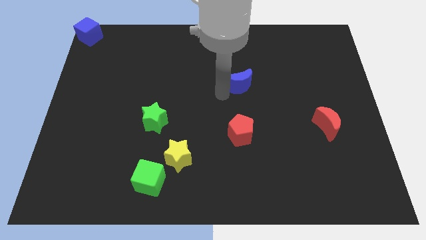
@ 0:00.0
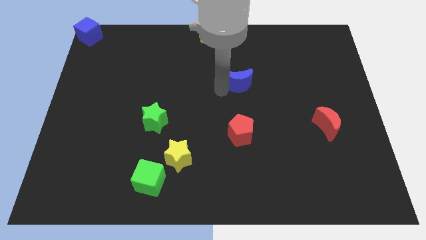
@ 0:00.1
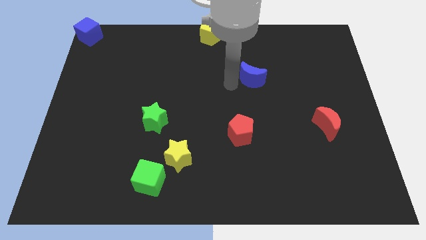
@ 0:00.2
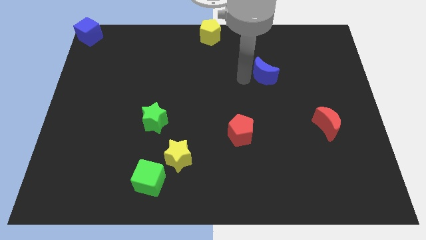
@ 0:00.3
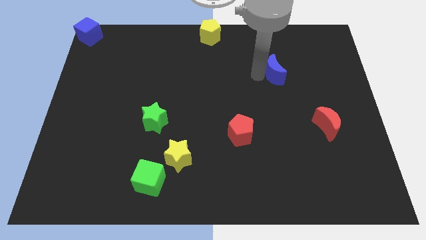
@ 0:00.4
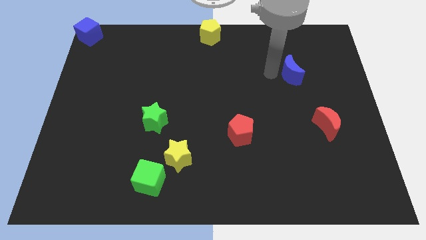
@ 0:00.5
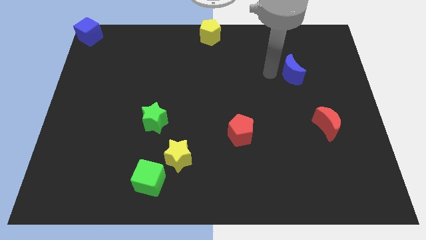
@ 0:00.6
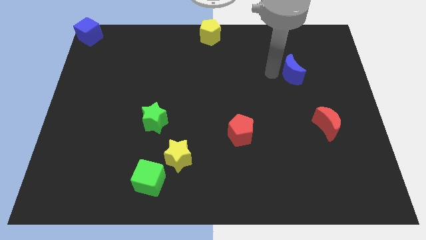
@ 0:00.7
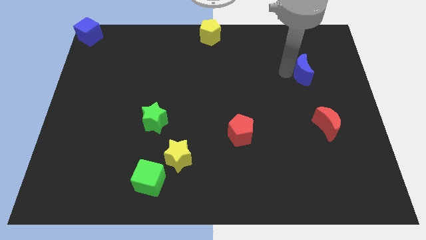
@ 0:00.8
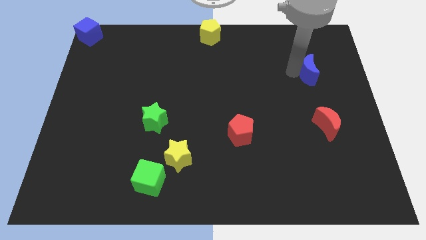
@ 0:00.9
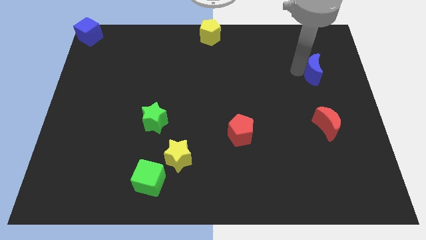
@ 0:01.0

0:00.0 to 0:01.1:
slide blue crescent on top of red moon

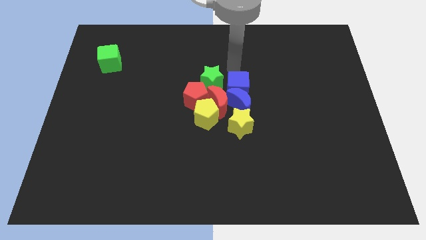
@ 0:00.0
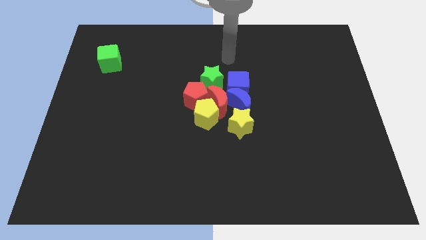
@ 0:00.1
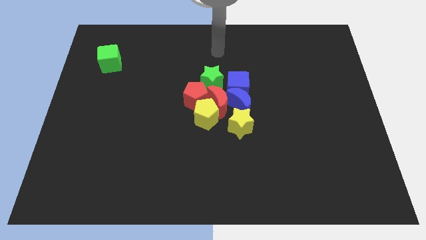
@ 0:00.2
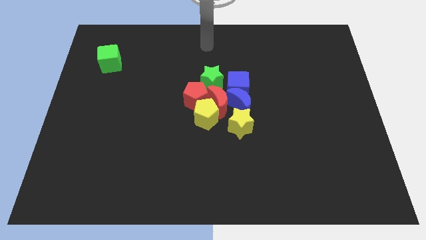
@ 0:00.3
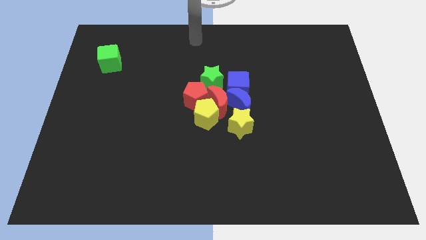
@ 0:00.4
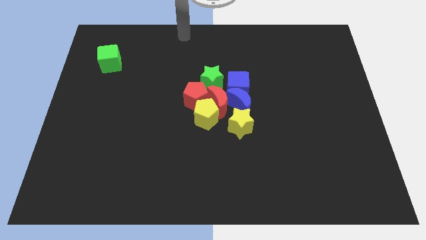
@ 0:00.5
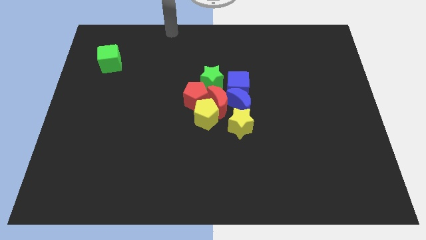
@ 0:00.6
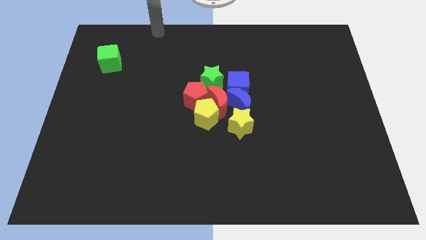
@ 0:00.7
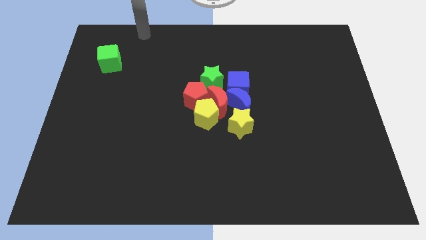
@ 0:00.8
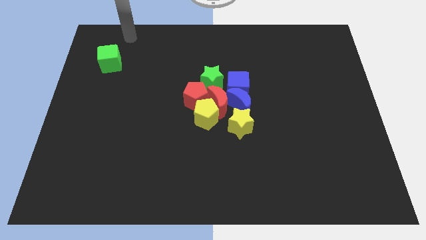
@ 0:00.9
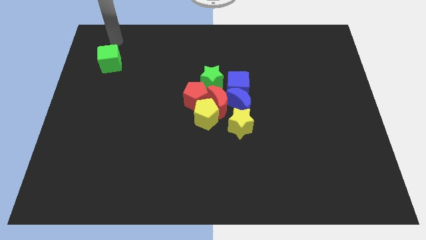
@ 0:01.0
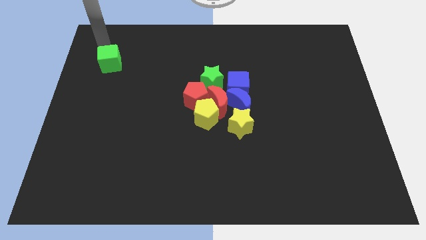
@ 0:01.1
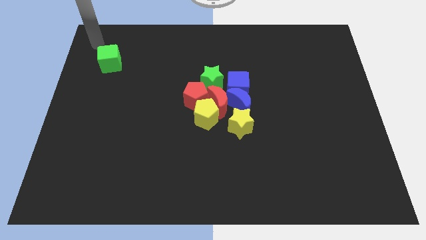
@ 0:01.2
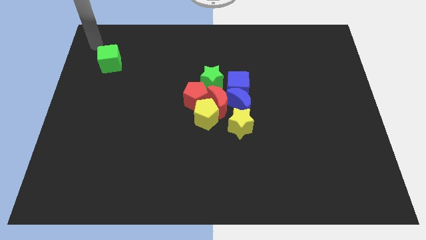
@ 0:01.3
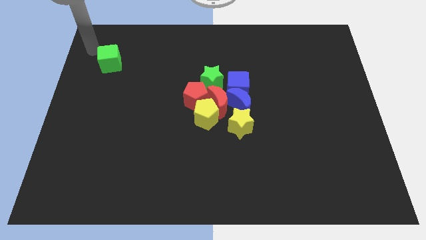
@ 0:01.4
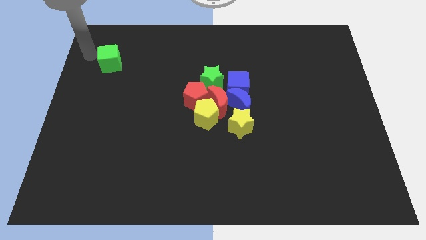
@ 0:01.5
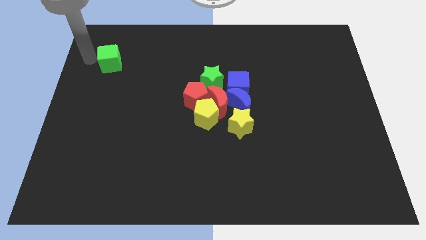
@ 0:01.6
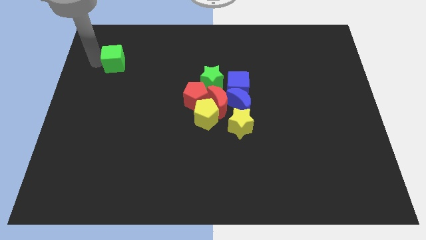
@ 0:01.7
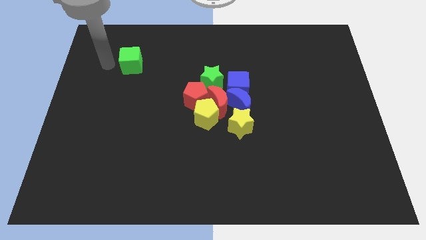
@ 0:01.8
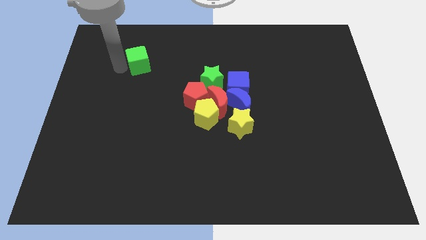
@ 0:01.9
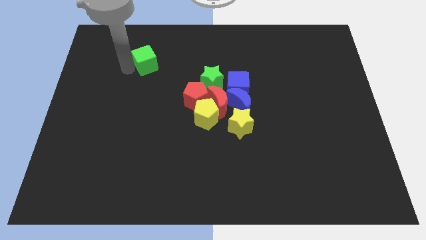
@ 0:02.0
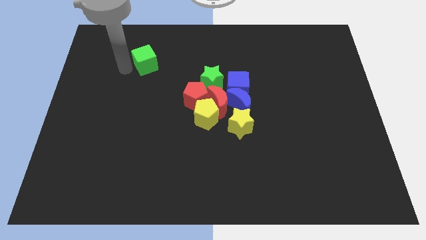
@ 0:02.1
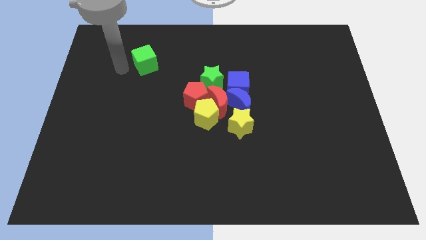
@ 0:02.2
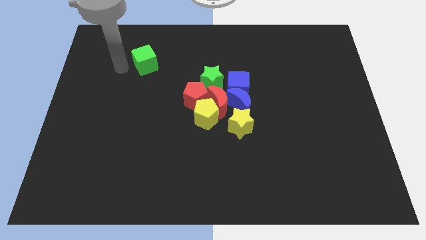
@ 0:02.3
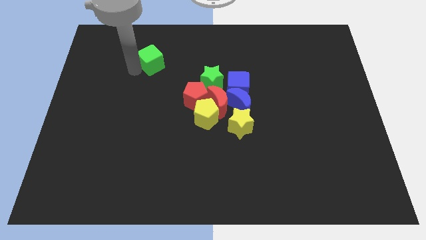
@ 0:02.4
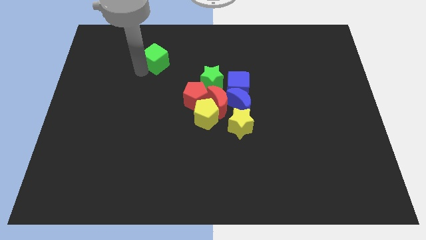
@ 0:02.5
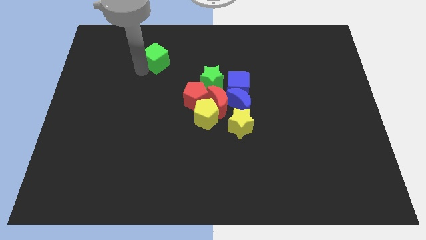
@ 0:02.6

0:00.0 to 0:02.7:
move the green cube slightly to the right

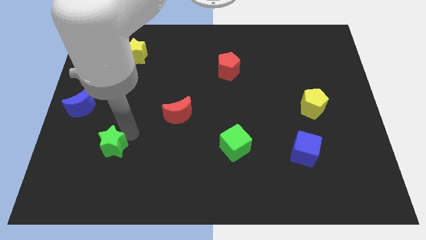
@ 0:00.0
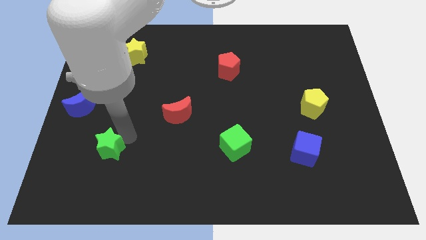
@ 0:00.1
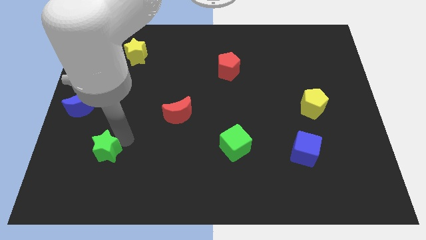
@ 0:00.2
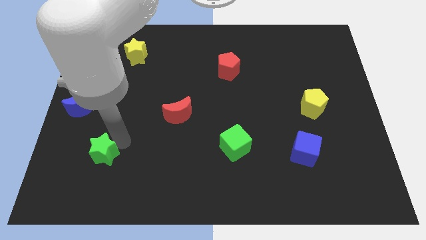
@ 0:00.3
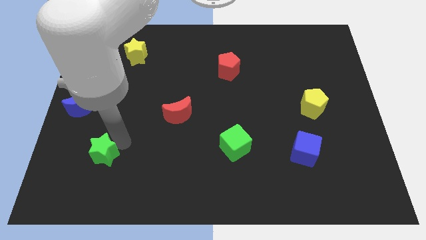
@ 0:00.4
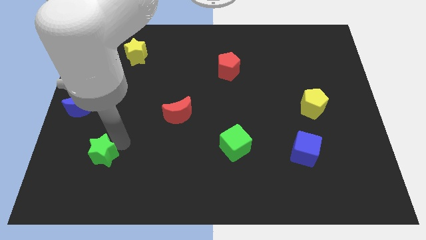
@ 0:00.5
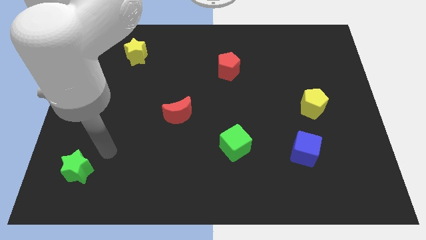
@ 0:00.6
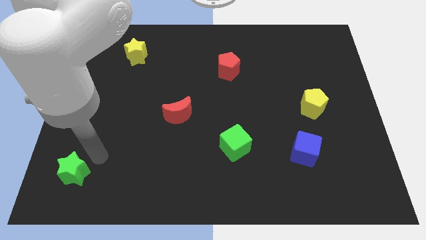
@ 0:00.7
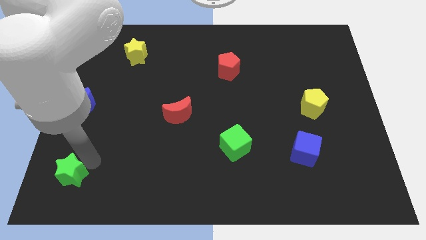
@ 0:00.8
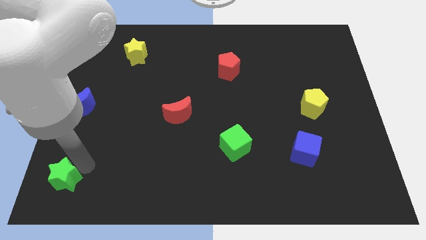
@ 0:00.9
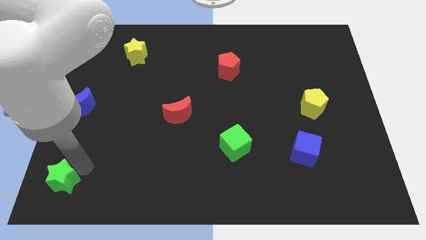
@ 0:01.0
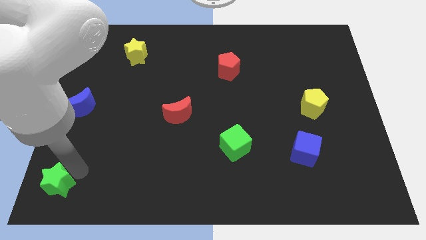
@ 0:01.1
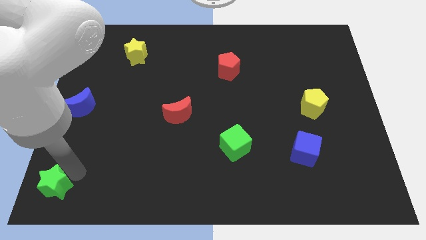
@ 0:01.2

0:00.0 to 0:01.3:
place the green star vertically below the blue crescent

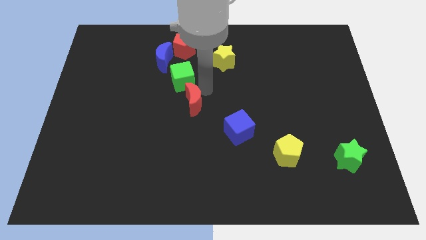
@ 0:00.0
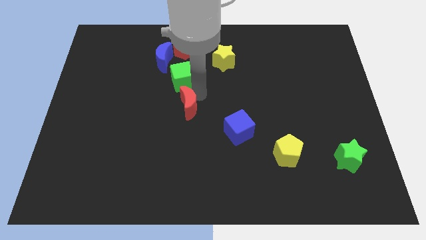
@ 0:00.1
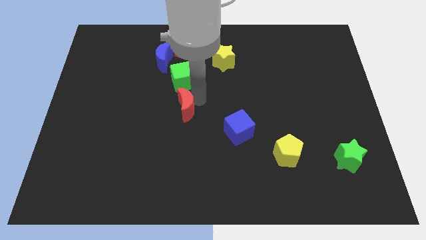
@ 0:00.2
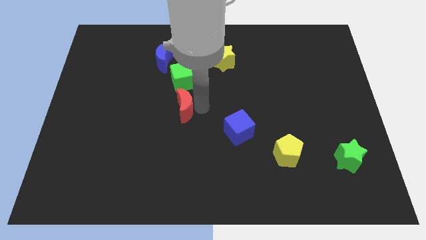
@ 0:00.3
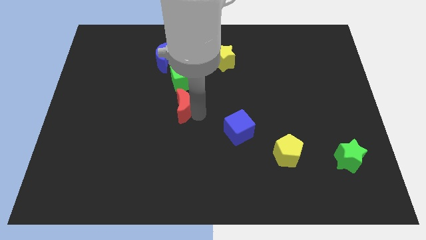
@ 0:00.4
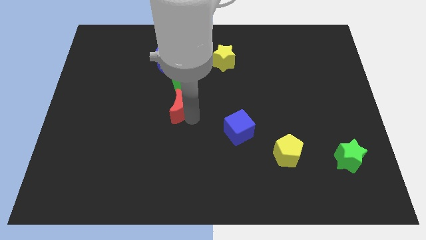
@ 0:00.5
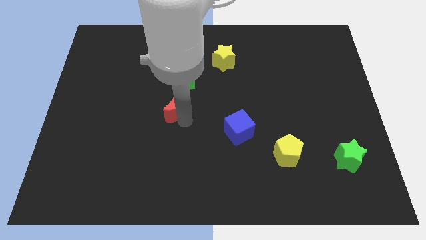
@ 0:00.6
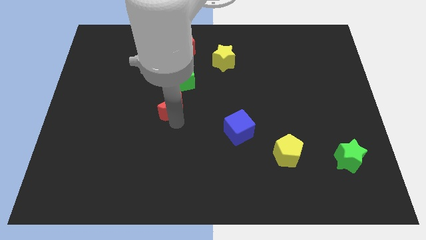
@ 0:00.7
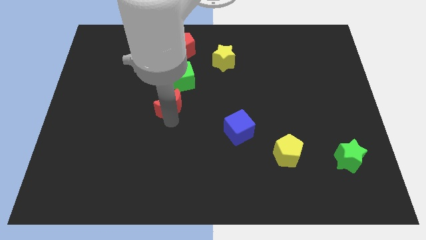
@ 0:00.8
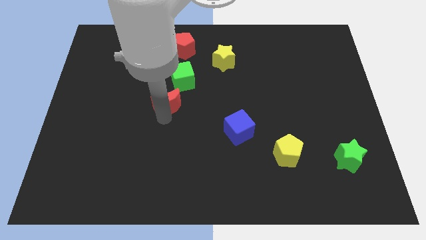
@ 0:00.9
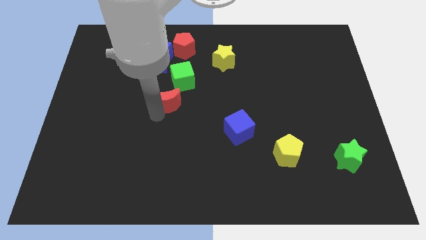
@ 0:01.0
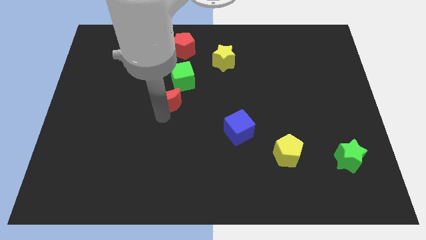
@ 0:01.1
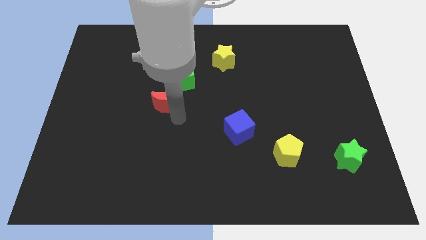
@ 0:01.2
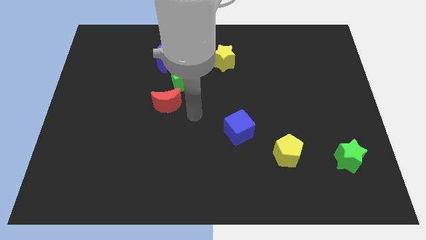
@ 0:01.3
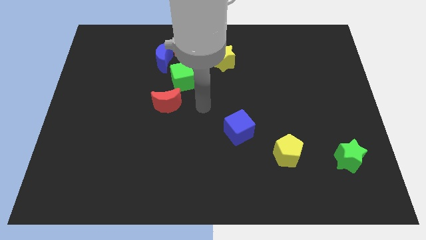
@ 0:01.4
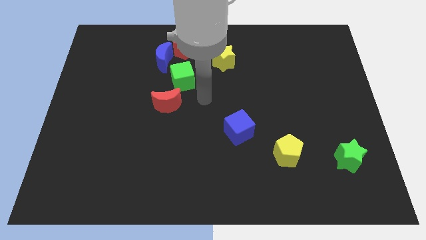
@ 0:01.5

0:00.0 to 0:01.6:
adjust the red crescent vertically below the blue moon

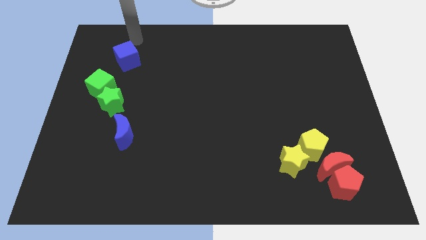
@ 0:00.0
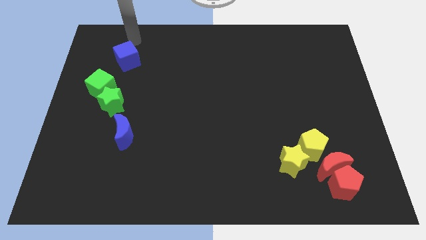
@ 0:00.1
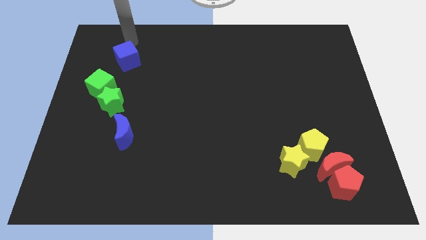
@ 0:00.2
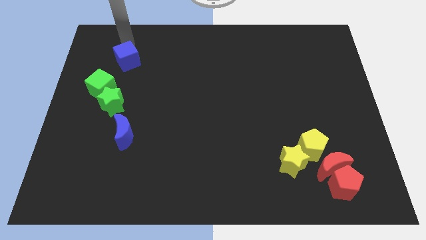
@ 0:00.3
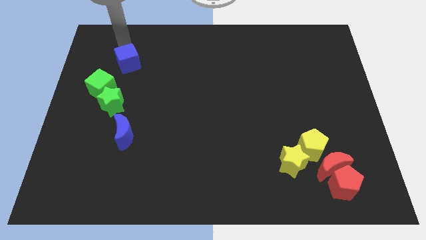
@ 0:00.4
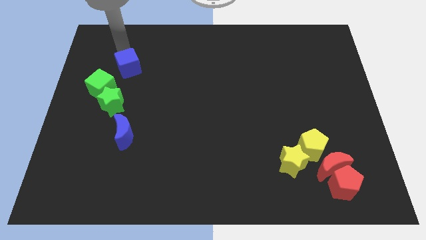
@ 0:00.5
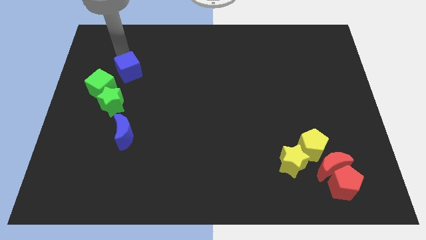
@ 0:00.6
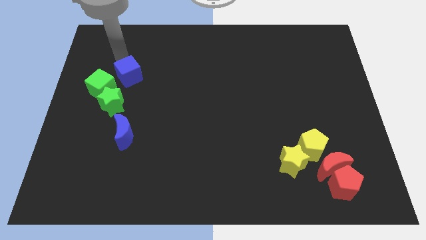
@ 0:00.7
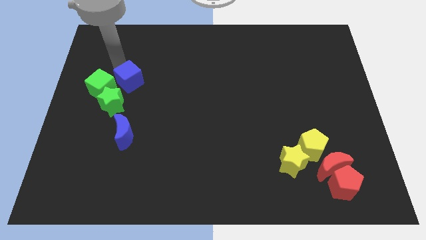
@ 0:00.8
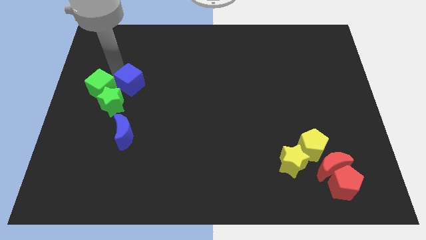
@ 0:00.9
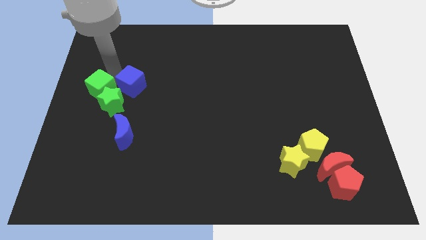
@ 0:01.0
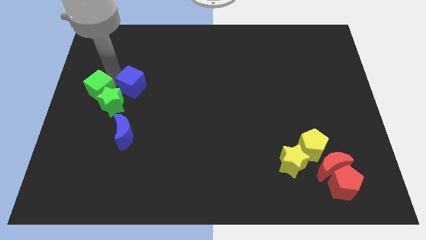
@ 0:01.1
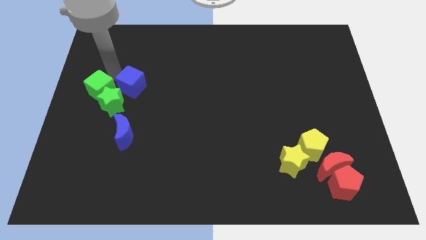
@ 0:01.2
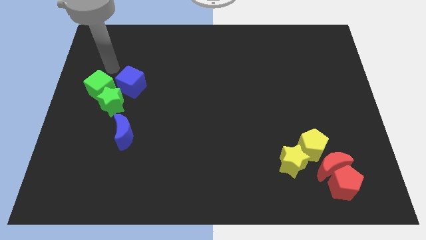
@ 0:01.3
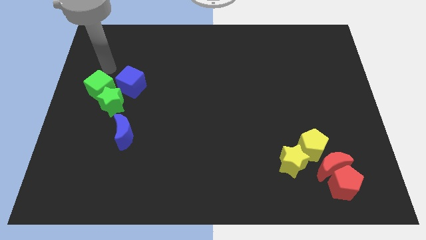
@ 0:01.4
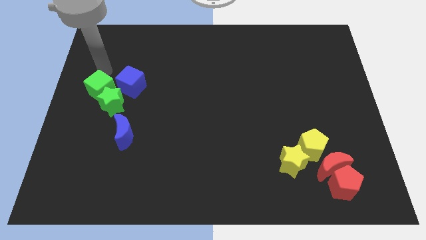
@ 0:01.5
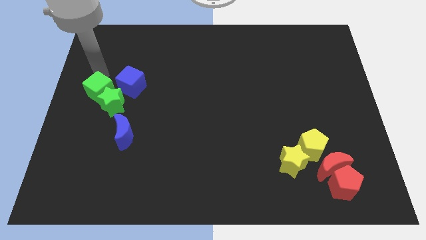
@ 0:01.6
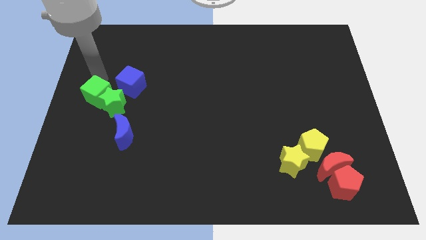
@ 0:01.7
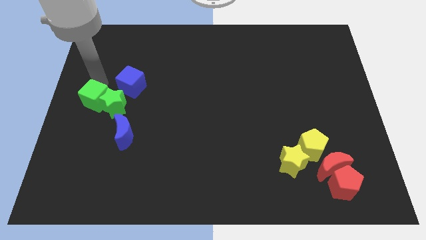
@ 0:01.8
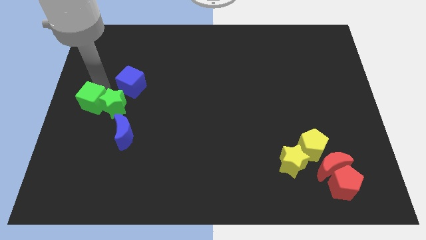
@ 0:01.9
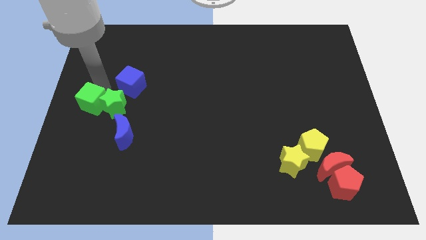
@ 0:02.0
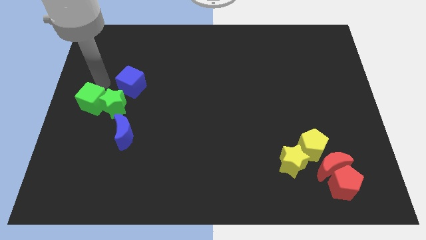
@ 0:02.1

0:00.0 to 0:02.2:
move the green cube slightly towards the left center of the board
